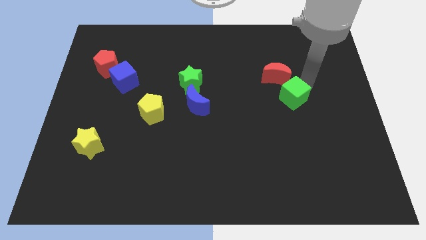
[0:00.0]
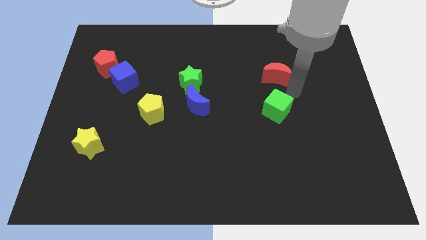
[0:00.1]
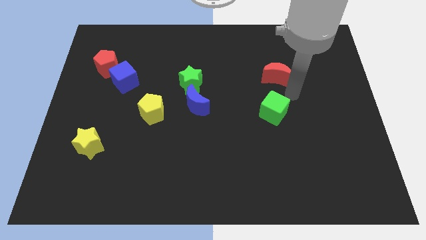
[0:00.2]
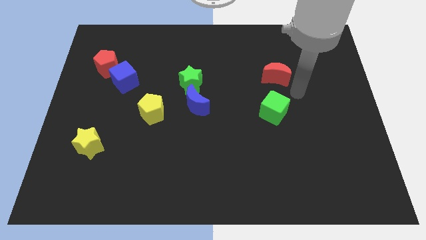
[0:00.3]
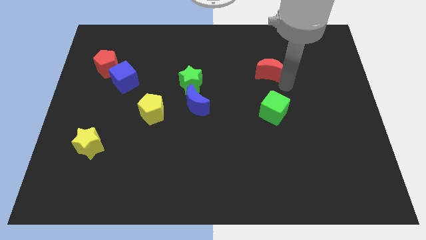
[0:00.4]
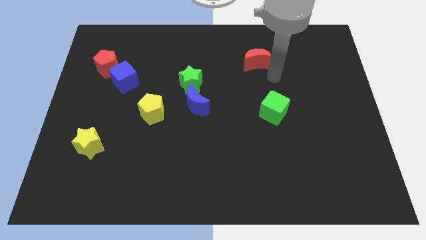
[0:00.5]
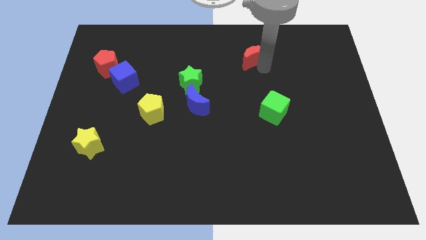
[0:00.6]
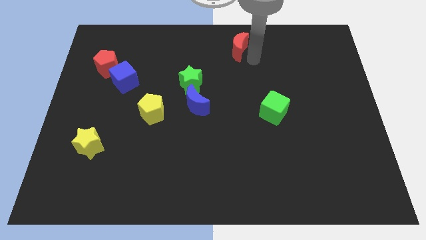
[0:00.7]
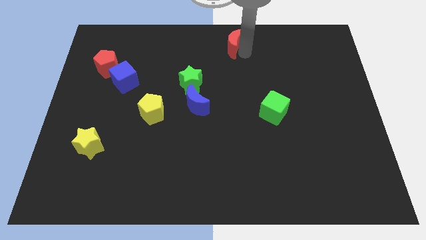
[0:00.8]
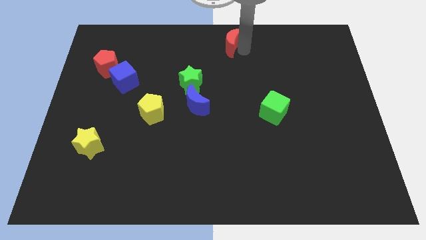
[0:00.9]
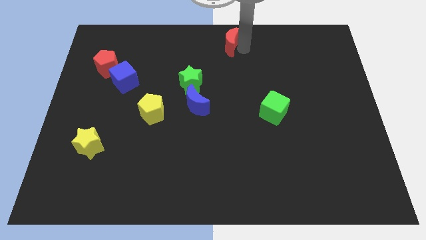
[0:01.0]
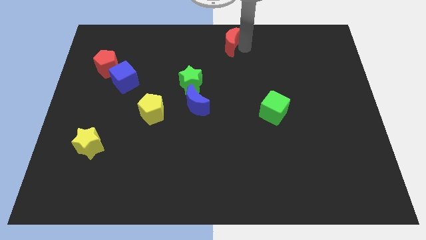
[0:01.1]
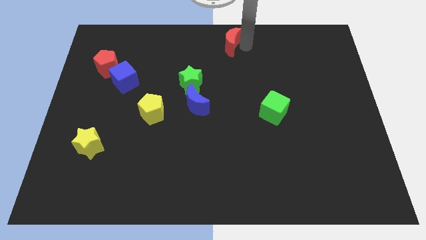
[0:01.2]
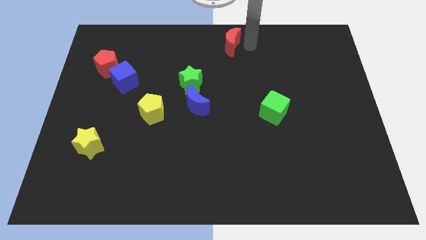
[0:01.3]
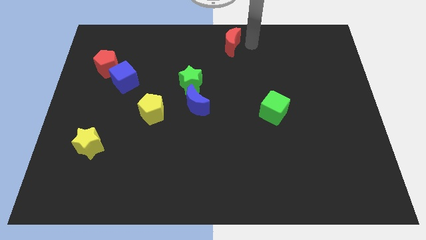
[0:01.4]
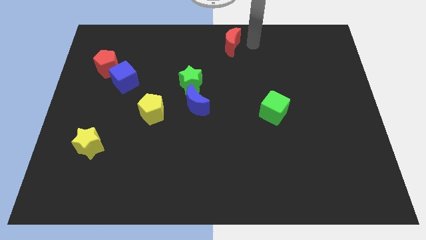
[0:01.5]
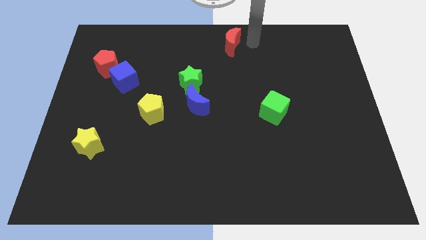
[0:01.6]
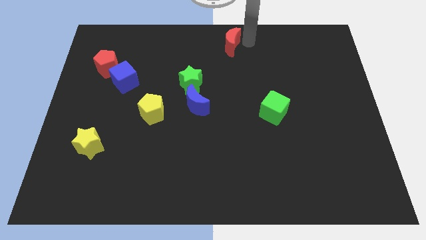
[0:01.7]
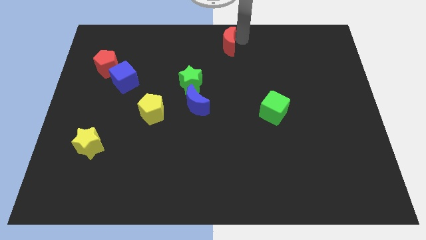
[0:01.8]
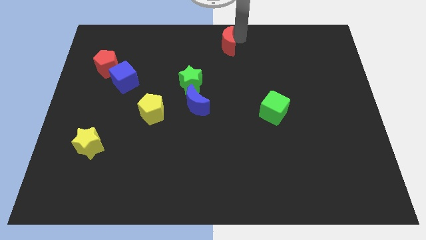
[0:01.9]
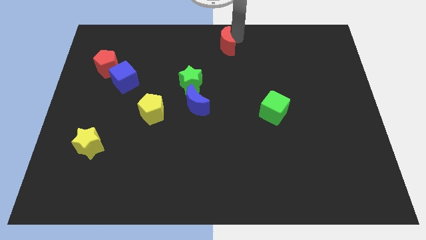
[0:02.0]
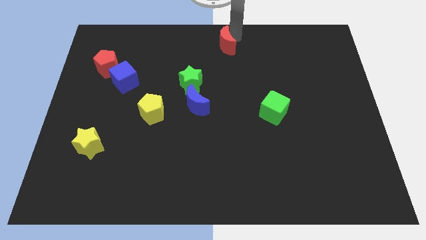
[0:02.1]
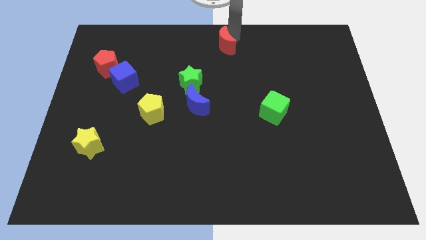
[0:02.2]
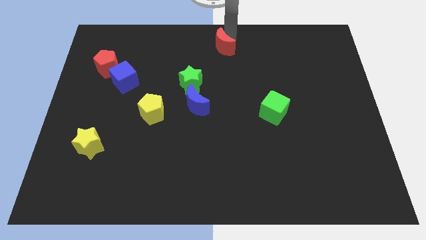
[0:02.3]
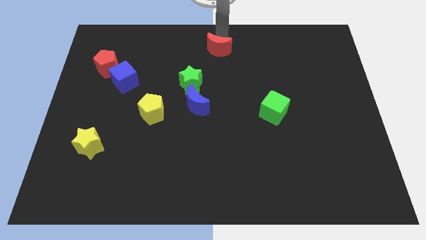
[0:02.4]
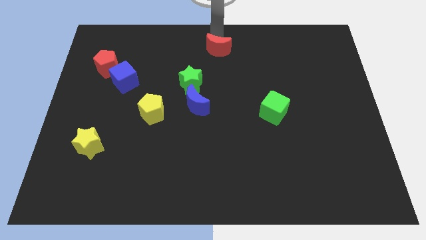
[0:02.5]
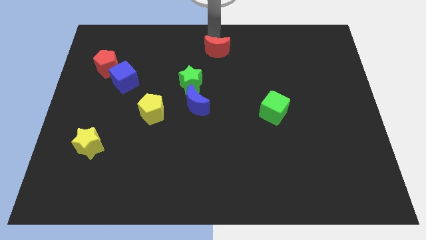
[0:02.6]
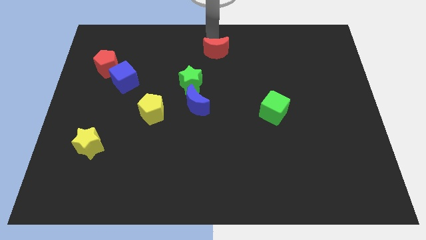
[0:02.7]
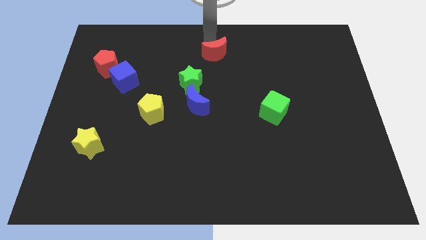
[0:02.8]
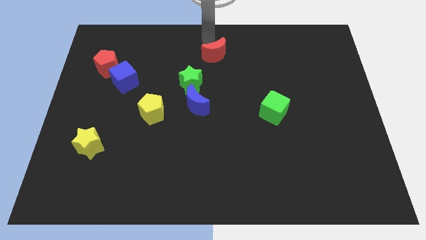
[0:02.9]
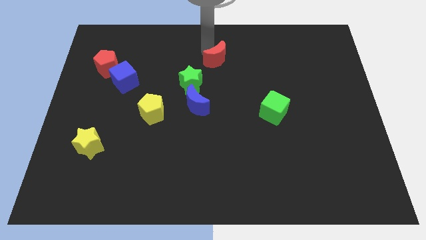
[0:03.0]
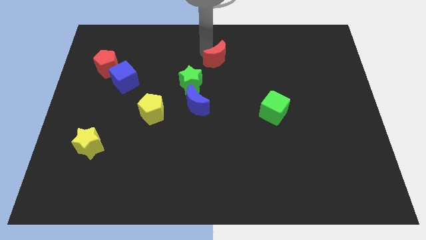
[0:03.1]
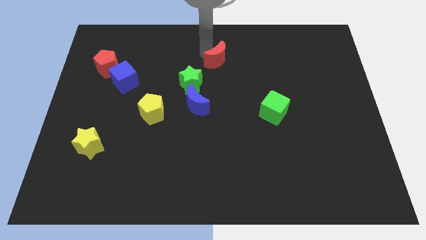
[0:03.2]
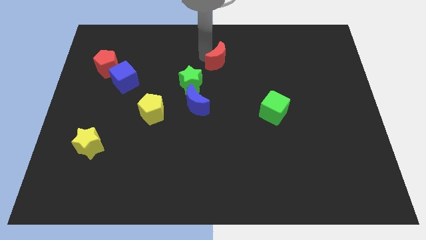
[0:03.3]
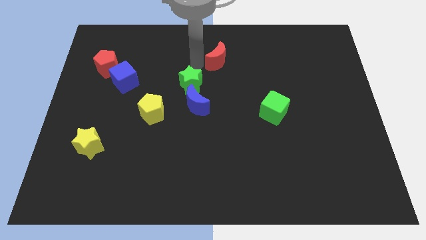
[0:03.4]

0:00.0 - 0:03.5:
push the red moon towards the green star

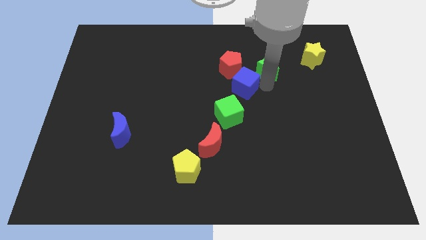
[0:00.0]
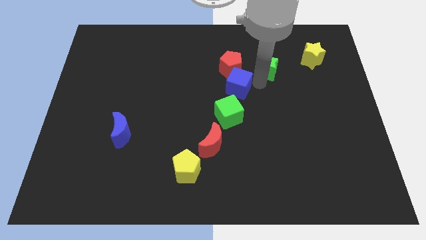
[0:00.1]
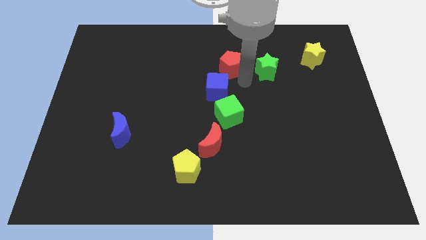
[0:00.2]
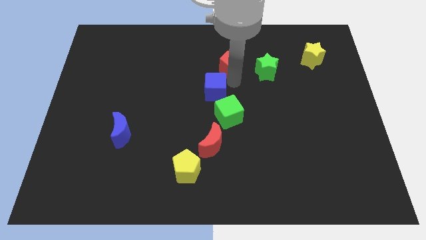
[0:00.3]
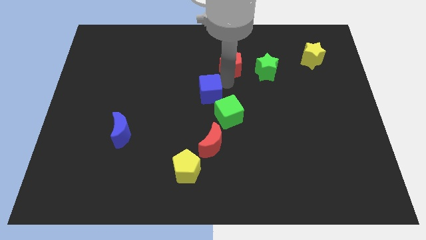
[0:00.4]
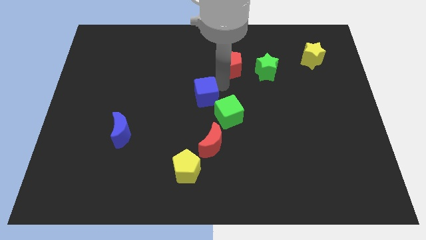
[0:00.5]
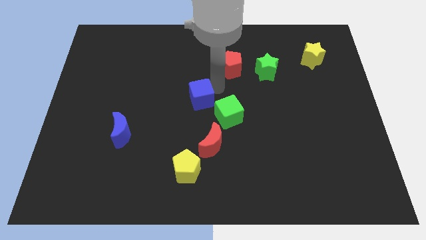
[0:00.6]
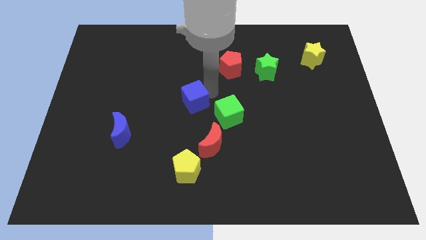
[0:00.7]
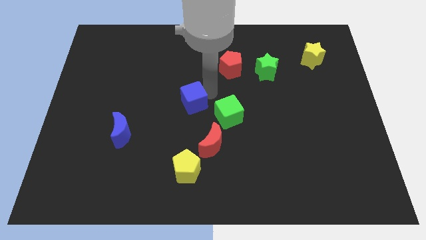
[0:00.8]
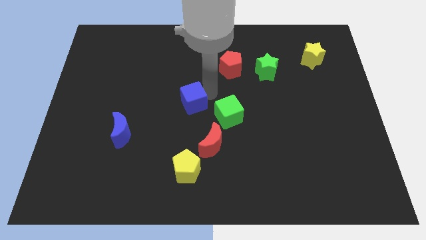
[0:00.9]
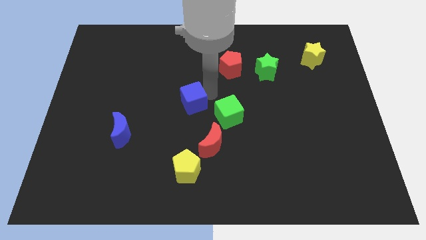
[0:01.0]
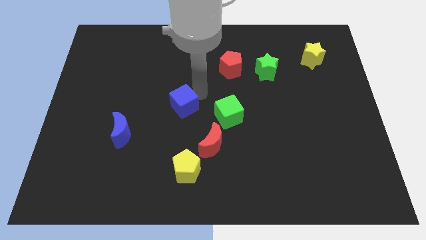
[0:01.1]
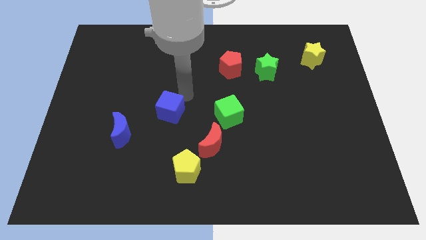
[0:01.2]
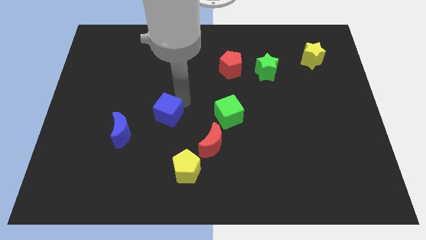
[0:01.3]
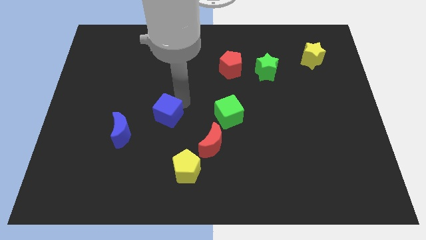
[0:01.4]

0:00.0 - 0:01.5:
place the blue cube to the left side of the green cube

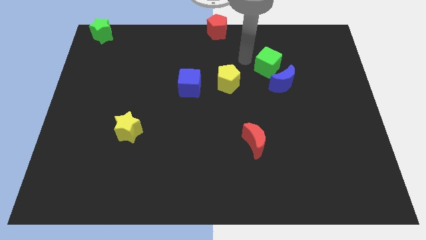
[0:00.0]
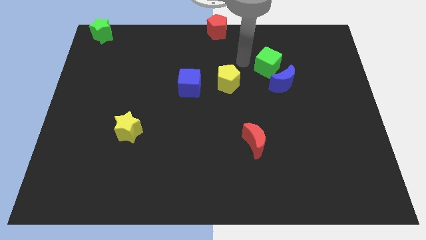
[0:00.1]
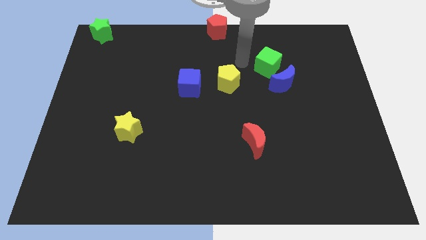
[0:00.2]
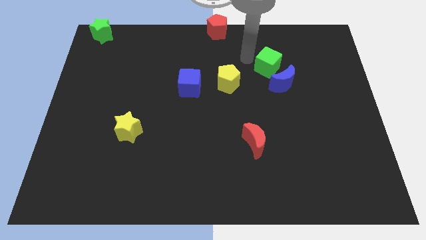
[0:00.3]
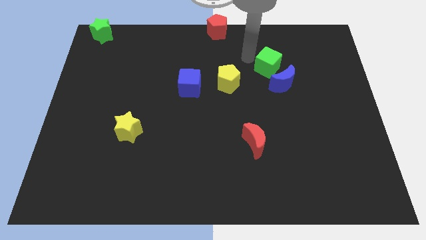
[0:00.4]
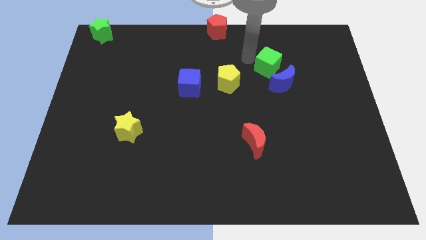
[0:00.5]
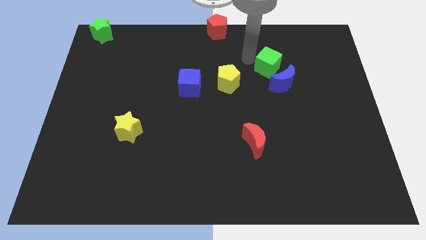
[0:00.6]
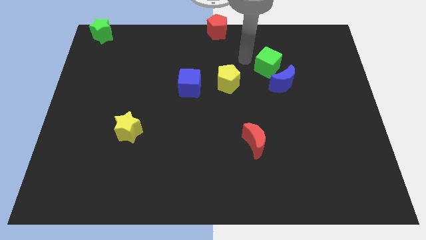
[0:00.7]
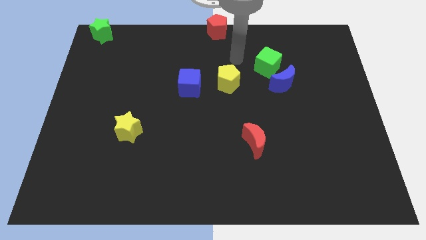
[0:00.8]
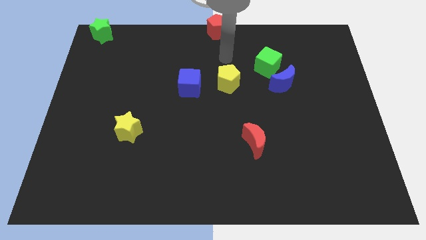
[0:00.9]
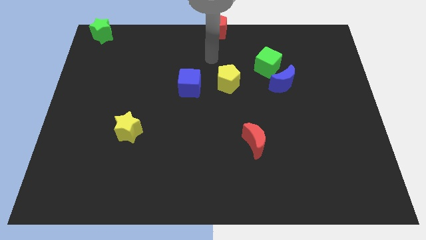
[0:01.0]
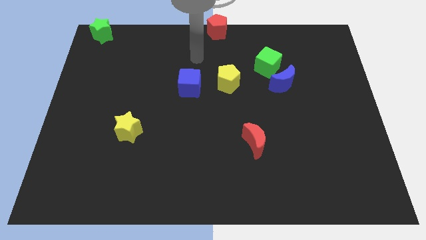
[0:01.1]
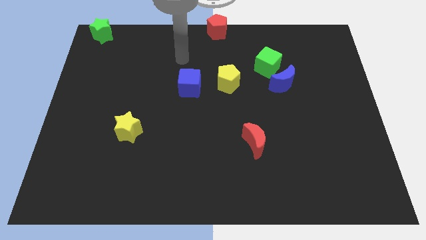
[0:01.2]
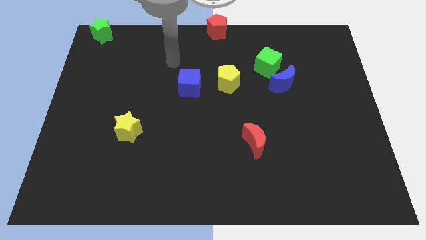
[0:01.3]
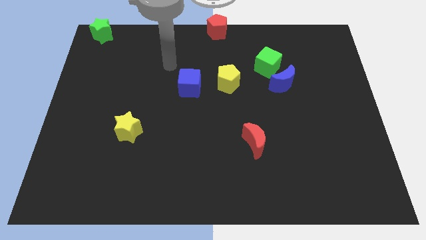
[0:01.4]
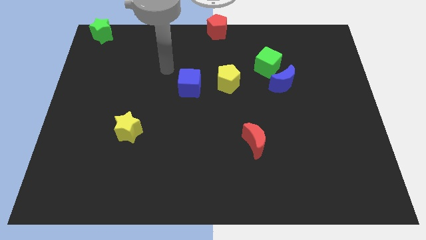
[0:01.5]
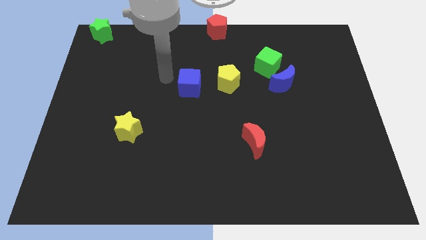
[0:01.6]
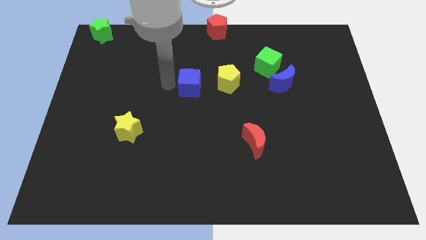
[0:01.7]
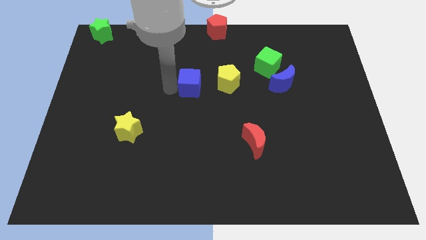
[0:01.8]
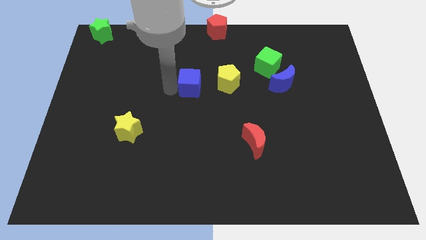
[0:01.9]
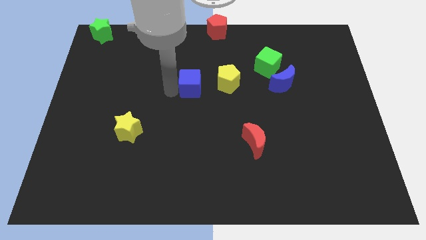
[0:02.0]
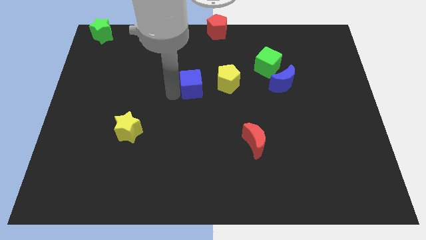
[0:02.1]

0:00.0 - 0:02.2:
touch the arm to the left of blue cube

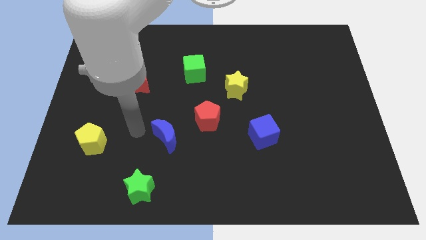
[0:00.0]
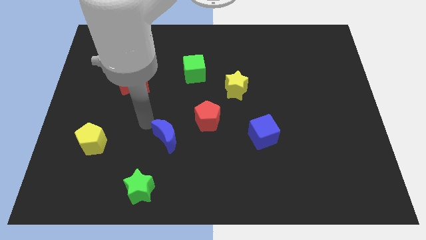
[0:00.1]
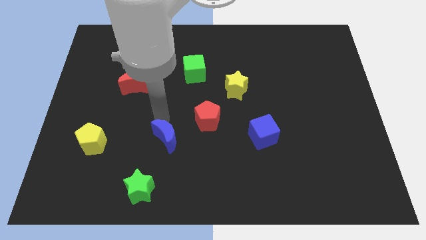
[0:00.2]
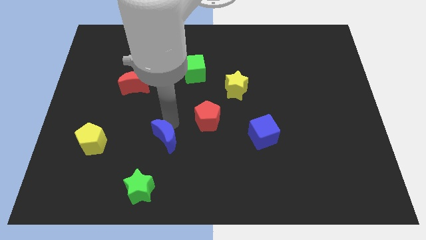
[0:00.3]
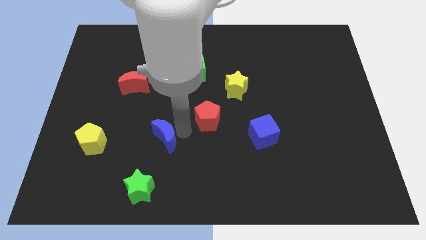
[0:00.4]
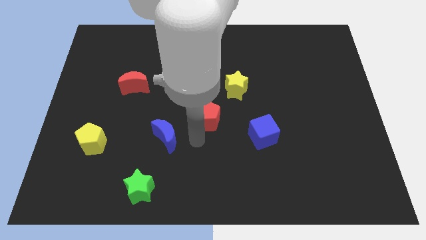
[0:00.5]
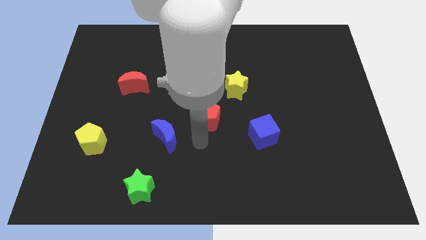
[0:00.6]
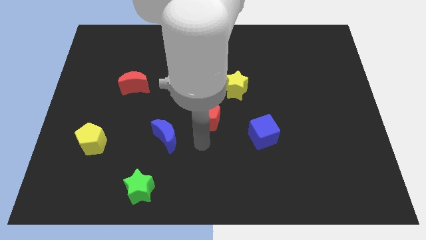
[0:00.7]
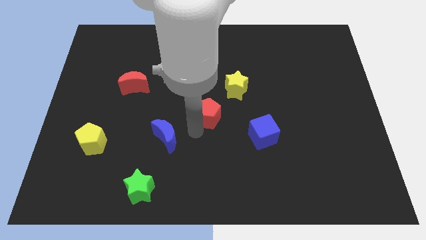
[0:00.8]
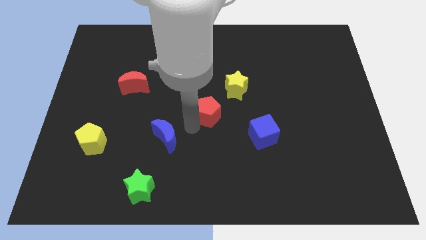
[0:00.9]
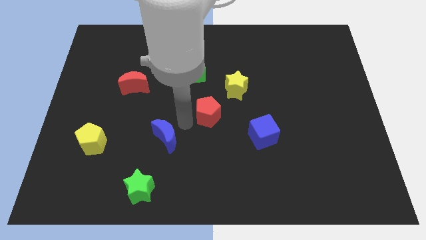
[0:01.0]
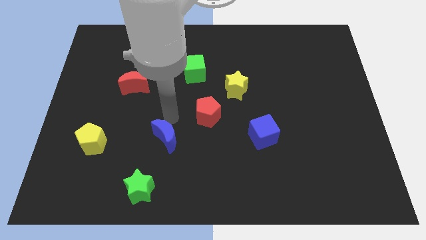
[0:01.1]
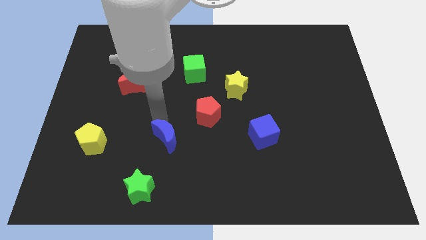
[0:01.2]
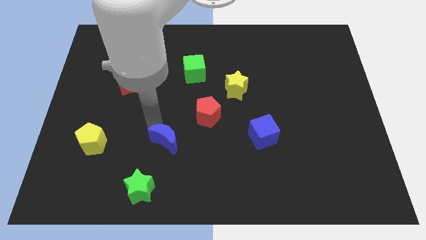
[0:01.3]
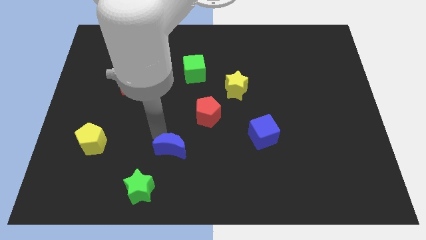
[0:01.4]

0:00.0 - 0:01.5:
move the red pentagon slightly upwards

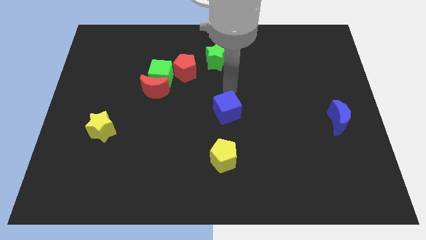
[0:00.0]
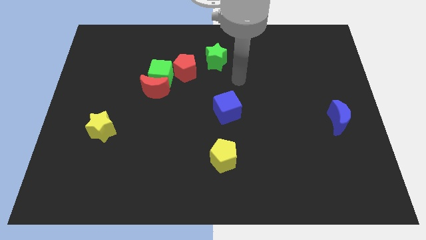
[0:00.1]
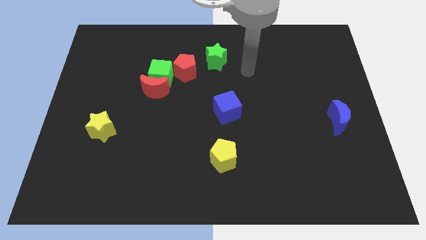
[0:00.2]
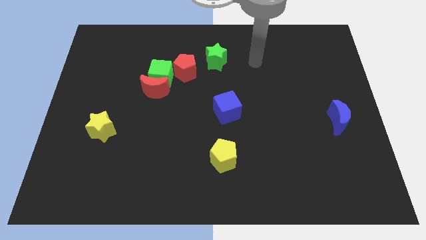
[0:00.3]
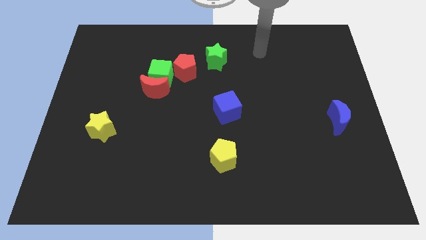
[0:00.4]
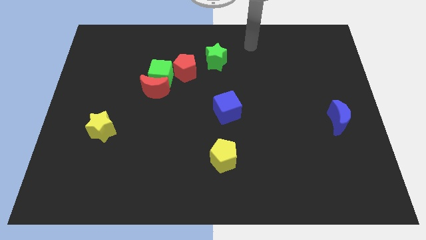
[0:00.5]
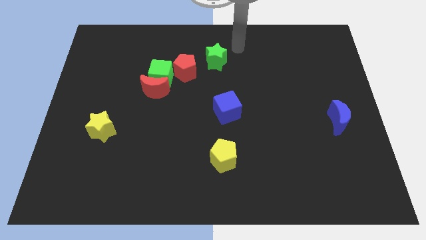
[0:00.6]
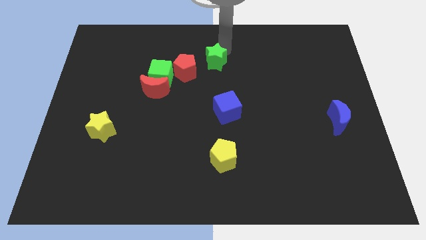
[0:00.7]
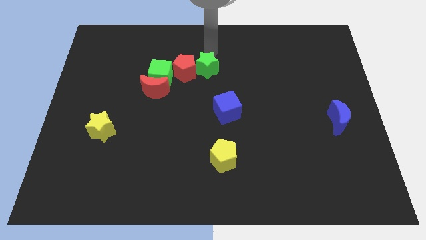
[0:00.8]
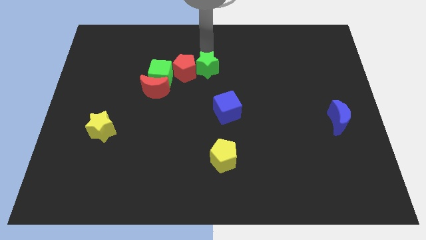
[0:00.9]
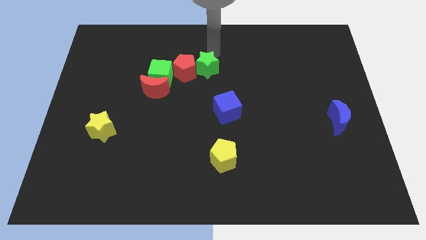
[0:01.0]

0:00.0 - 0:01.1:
push the green star into the red pentagon
